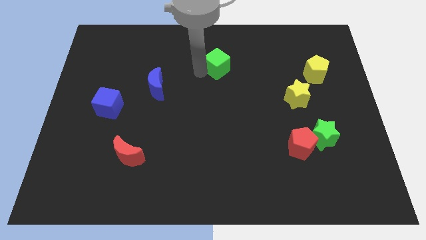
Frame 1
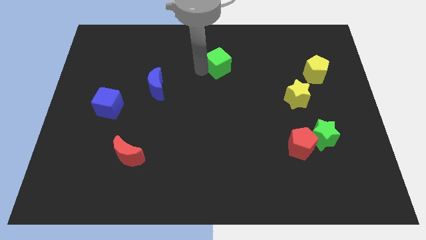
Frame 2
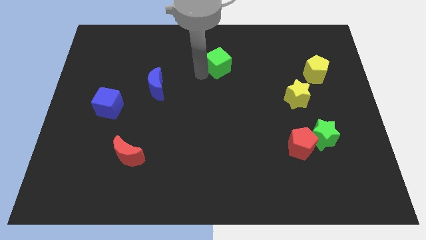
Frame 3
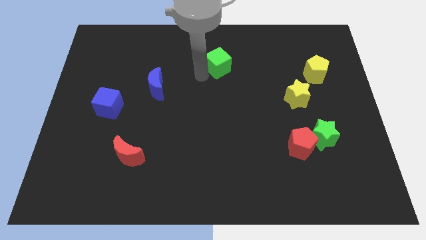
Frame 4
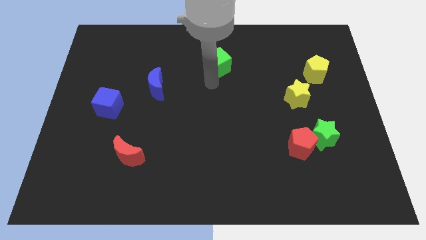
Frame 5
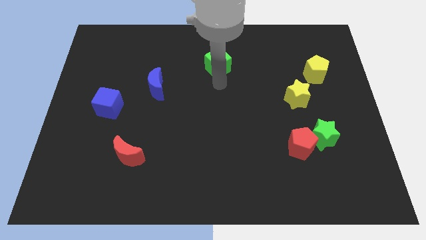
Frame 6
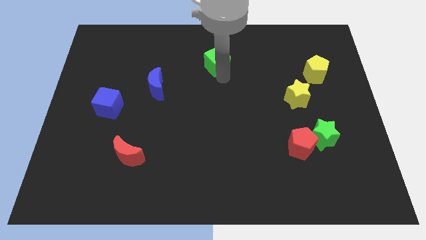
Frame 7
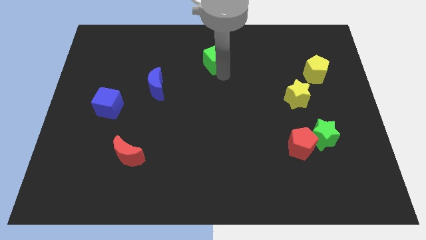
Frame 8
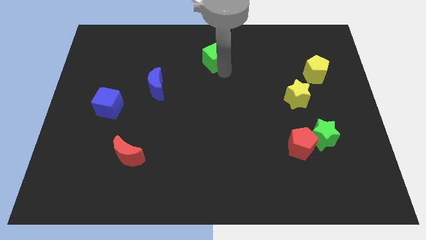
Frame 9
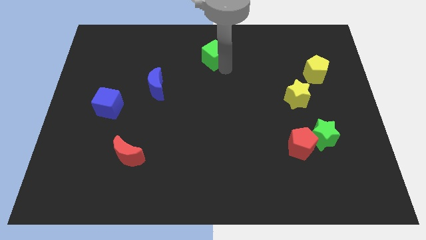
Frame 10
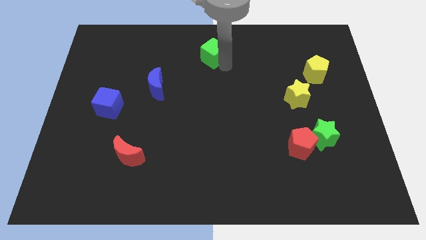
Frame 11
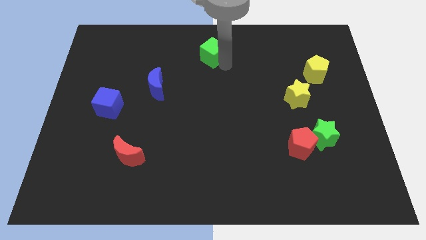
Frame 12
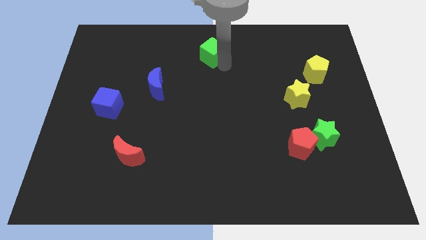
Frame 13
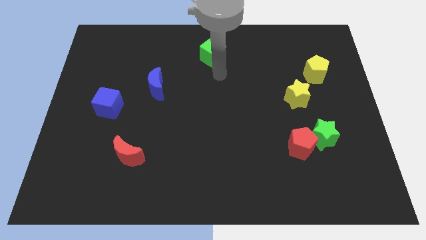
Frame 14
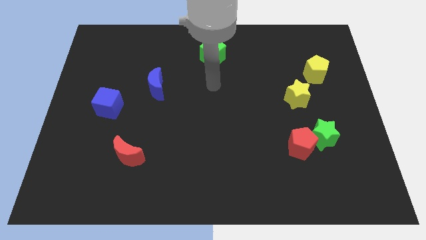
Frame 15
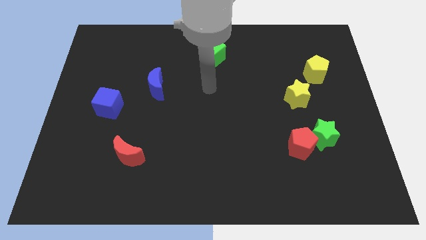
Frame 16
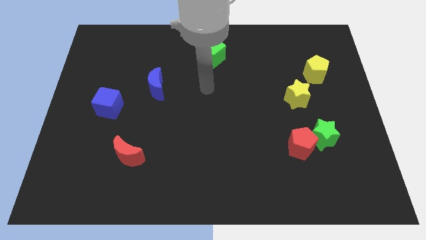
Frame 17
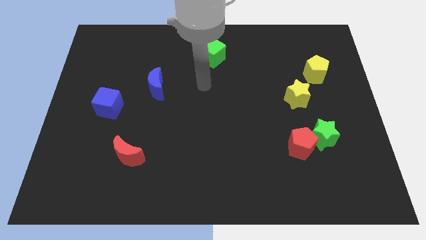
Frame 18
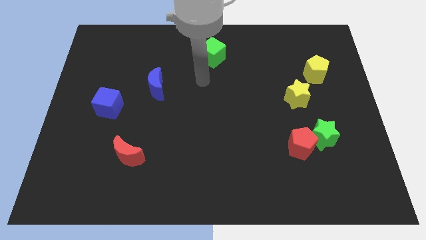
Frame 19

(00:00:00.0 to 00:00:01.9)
push the green cube slightly towards the top center

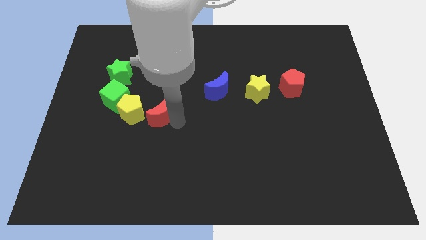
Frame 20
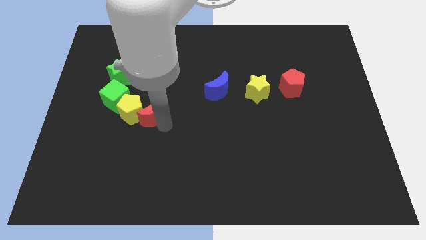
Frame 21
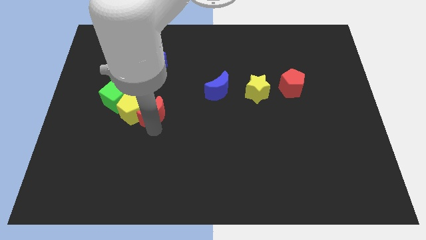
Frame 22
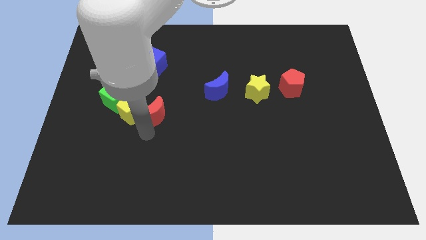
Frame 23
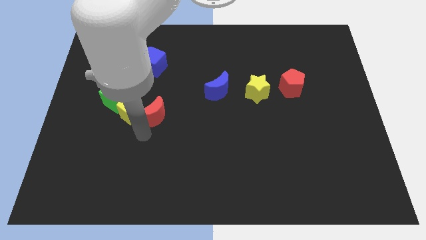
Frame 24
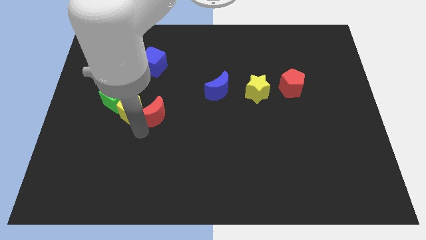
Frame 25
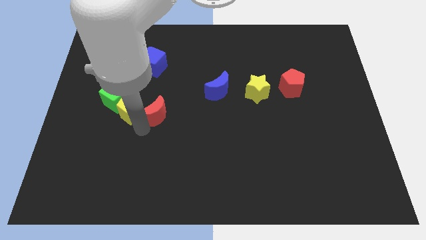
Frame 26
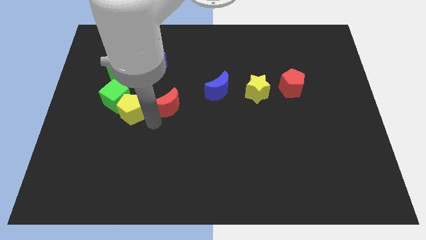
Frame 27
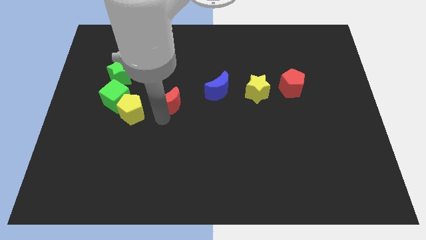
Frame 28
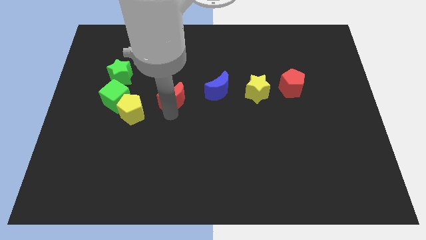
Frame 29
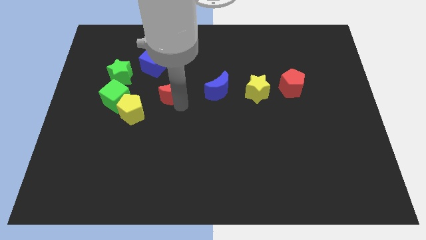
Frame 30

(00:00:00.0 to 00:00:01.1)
place the red moon to the left of blue moon

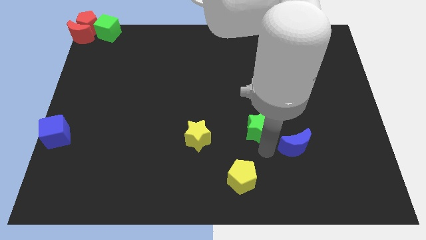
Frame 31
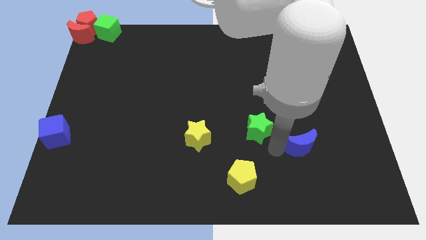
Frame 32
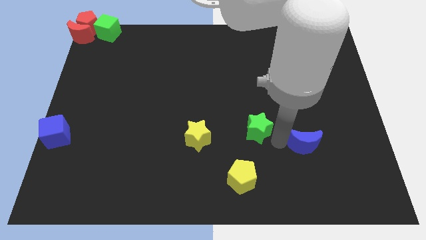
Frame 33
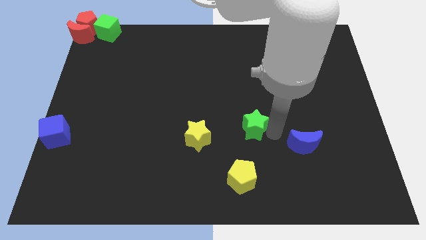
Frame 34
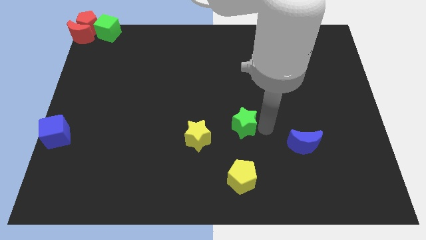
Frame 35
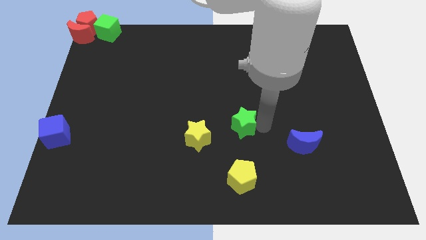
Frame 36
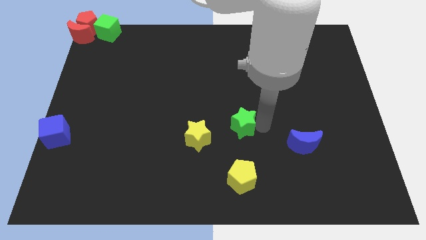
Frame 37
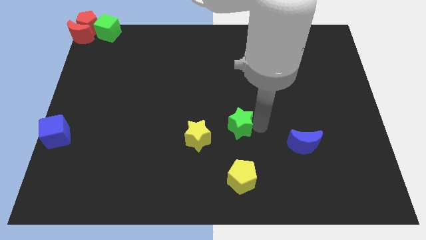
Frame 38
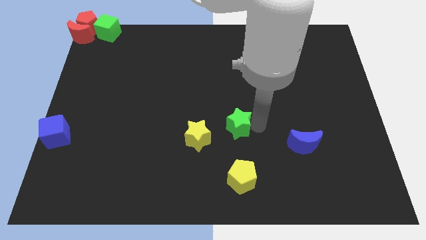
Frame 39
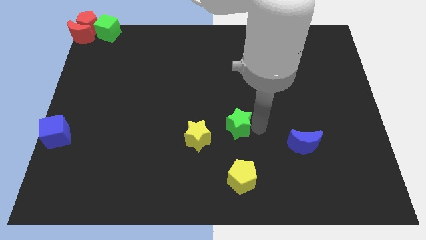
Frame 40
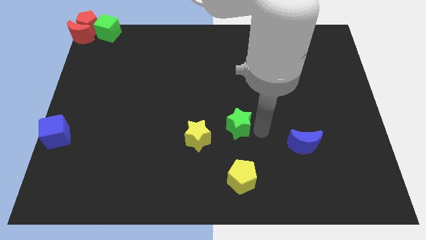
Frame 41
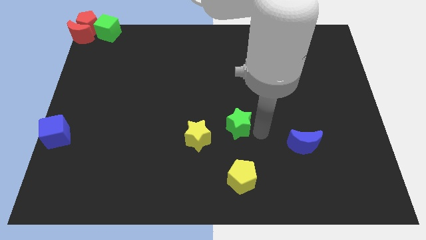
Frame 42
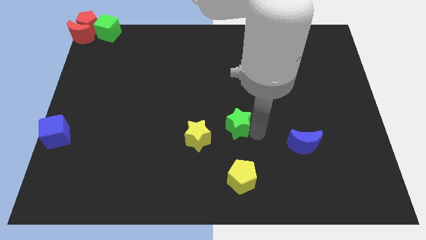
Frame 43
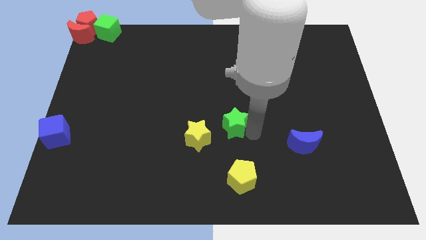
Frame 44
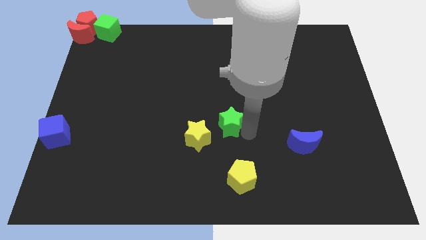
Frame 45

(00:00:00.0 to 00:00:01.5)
place green star right to yellow star

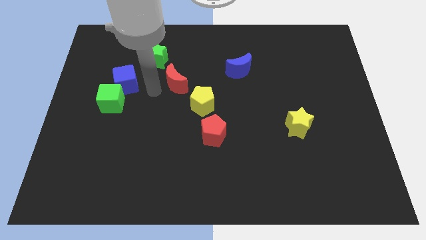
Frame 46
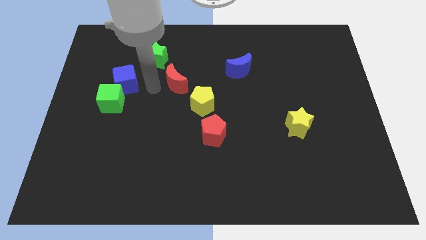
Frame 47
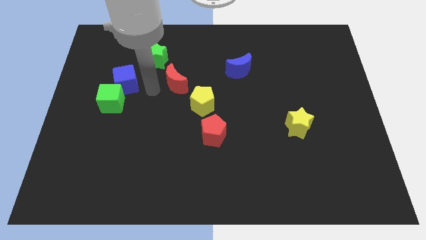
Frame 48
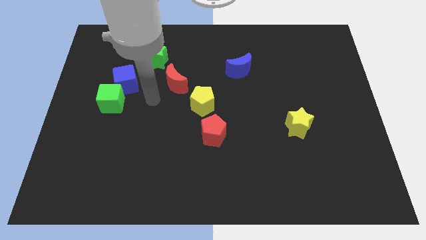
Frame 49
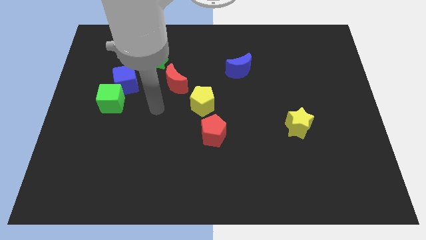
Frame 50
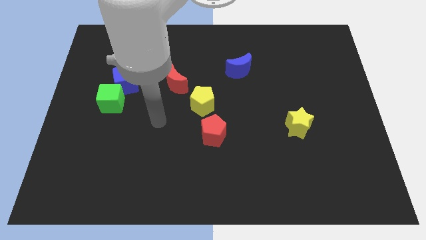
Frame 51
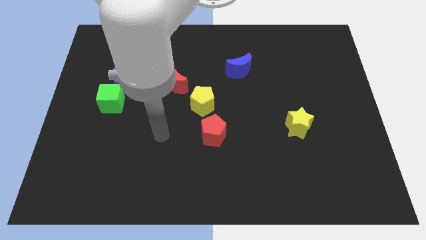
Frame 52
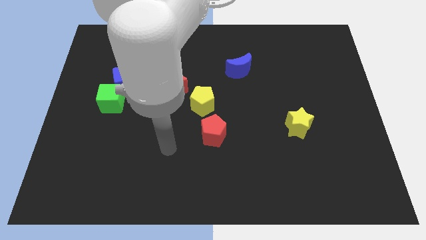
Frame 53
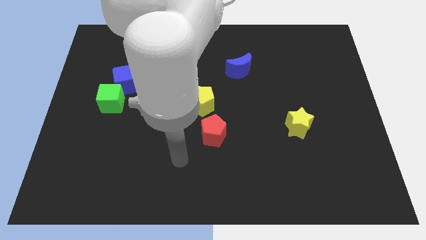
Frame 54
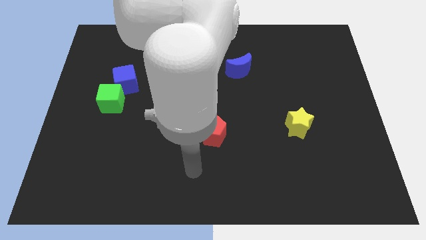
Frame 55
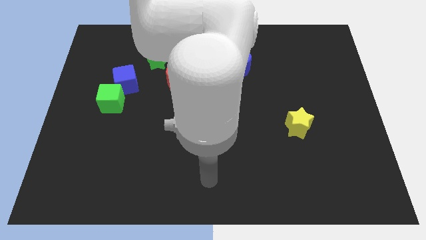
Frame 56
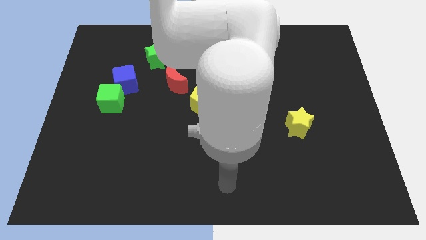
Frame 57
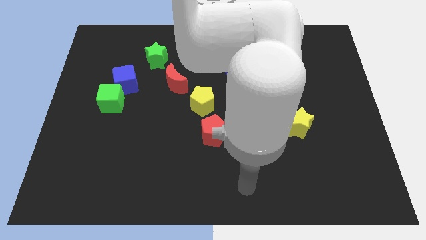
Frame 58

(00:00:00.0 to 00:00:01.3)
move your hand towards the bottom center

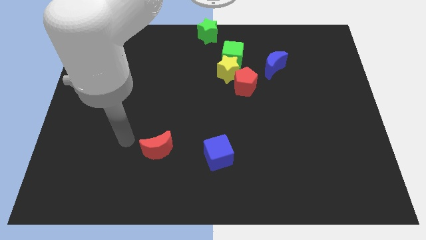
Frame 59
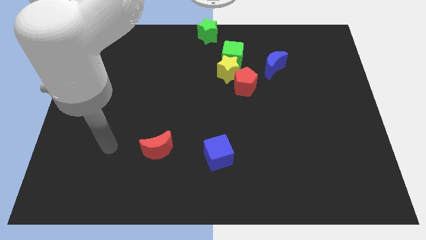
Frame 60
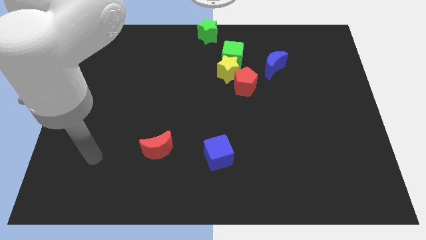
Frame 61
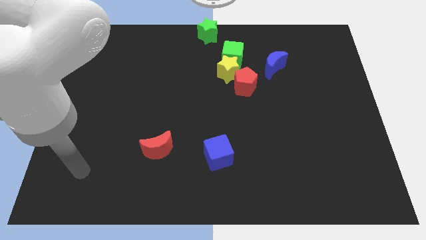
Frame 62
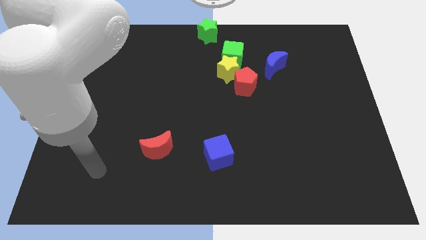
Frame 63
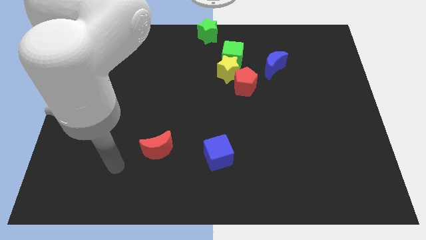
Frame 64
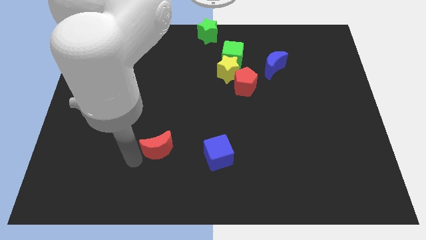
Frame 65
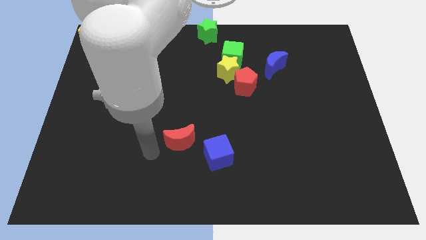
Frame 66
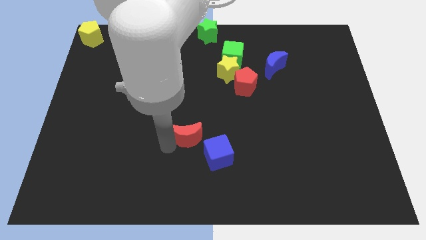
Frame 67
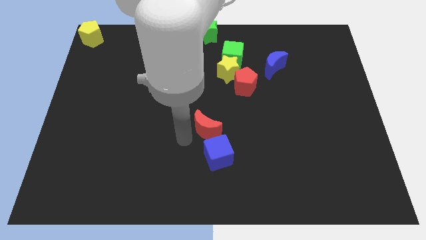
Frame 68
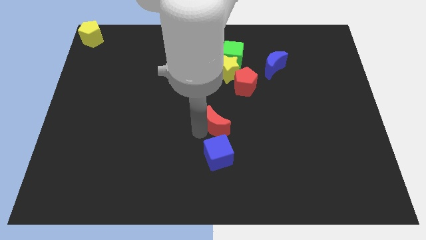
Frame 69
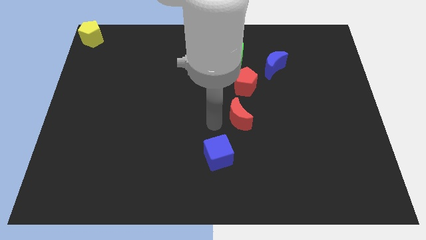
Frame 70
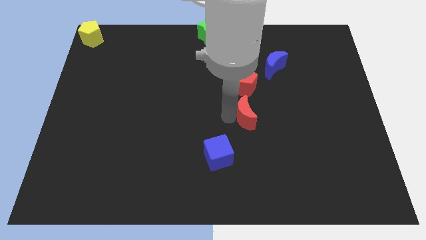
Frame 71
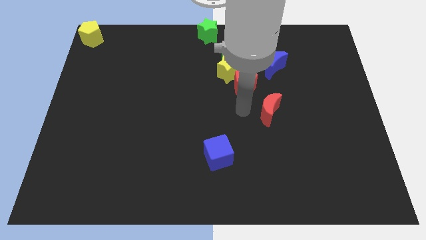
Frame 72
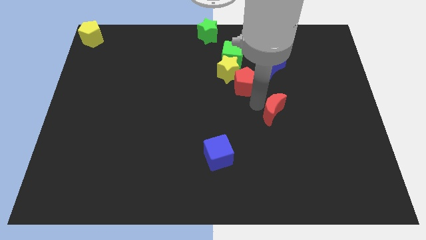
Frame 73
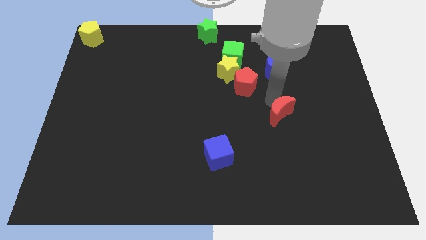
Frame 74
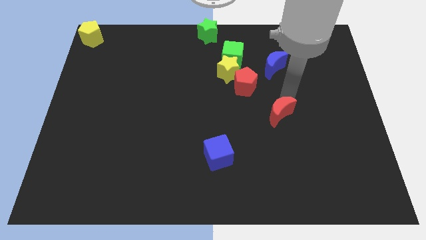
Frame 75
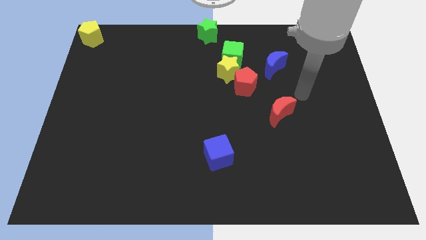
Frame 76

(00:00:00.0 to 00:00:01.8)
place the red moon below the blue moon

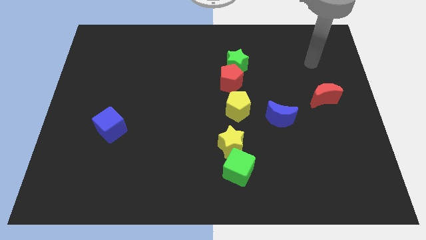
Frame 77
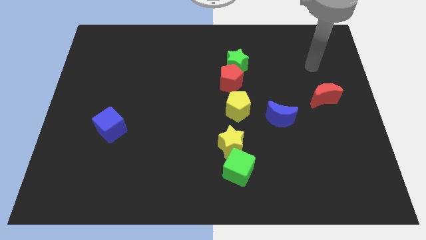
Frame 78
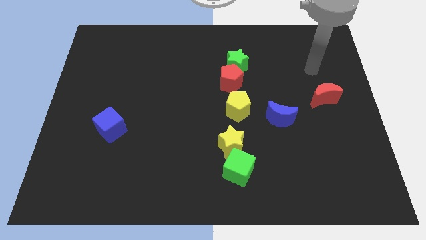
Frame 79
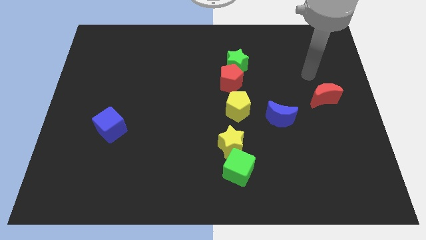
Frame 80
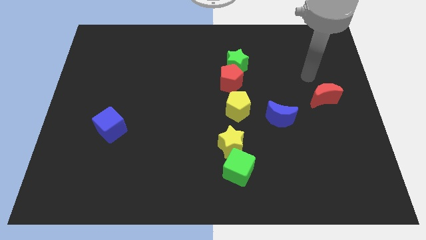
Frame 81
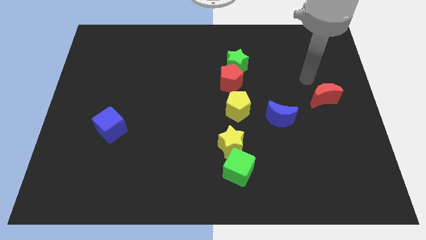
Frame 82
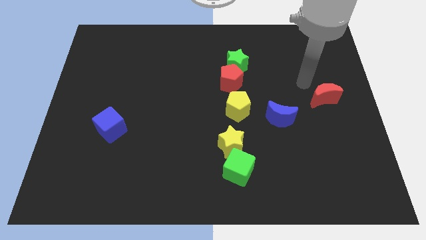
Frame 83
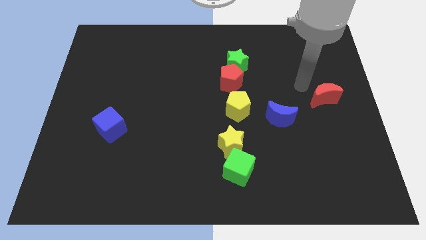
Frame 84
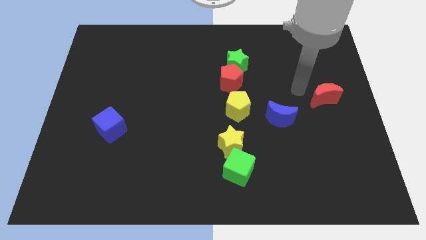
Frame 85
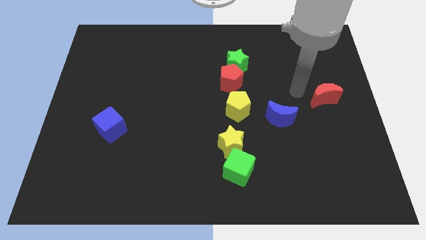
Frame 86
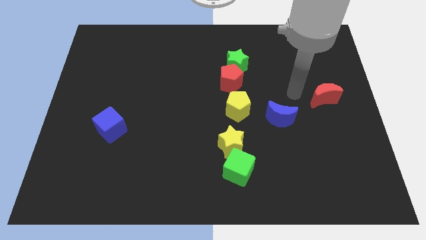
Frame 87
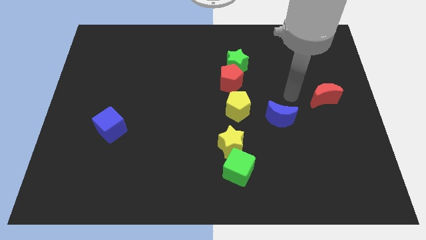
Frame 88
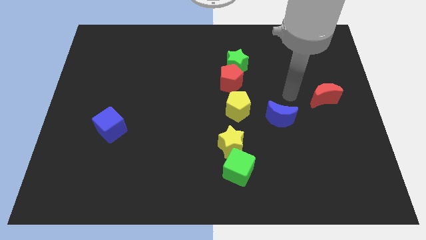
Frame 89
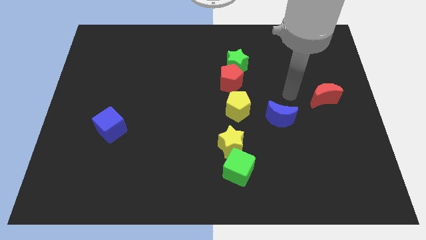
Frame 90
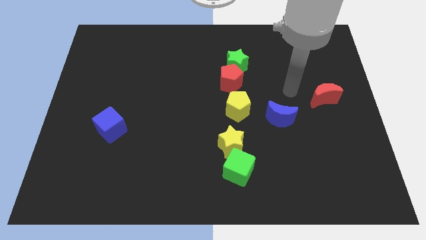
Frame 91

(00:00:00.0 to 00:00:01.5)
point your hand at the left side of the crescent
